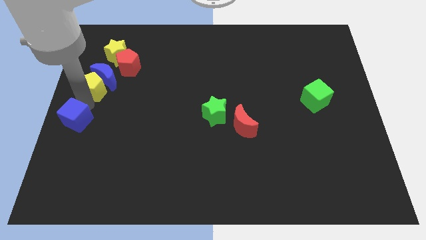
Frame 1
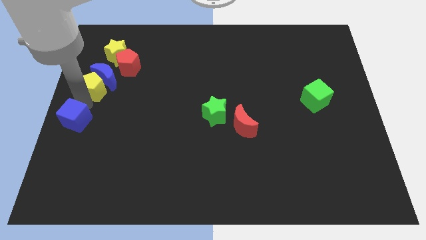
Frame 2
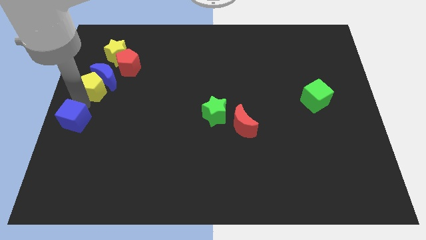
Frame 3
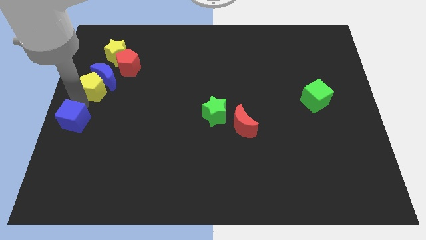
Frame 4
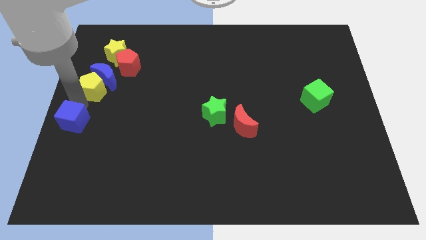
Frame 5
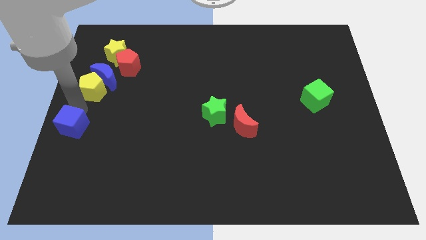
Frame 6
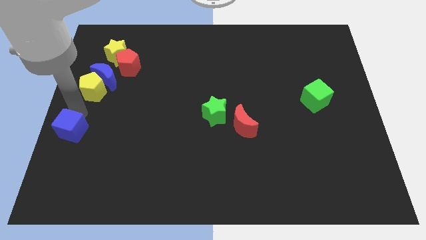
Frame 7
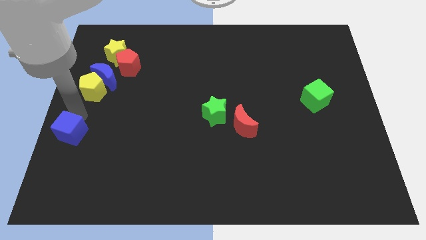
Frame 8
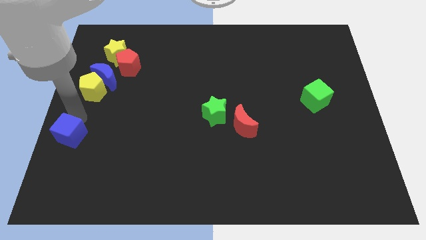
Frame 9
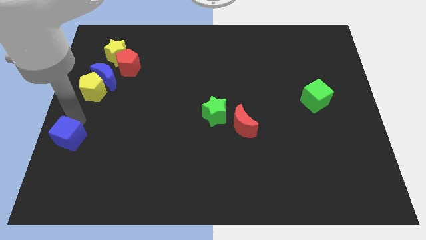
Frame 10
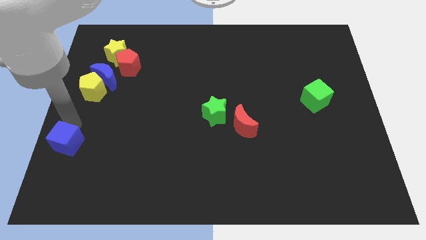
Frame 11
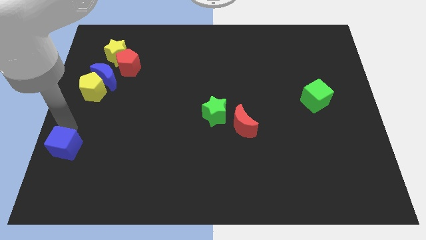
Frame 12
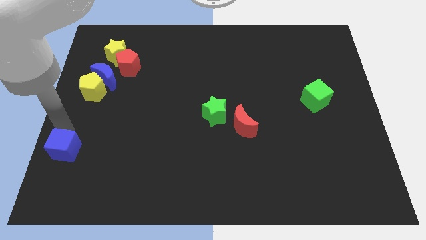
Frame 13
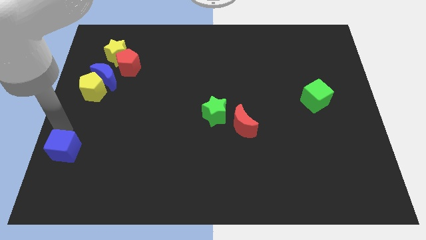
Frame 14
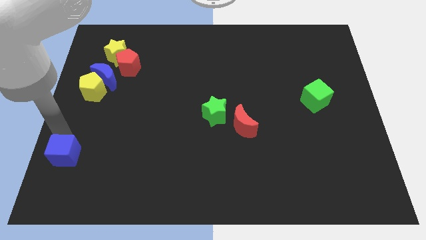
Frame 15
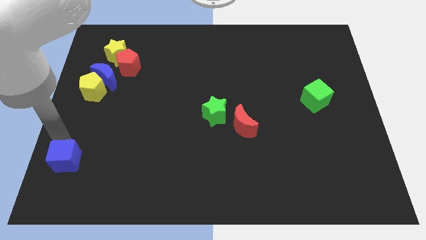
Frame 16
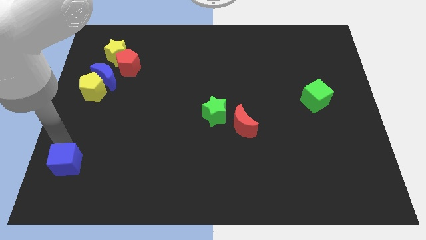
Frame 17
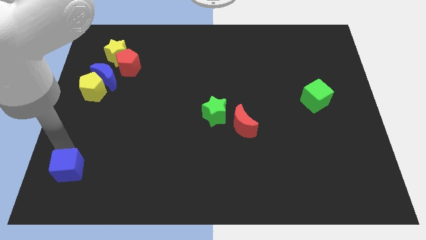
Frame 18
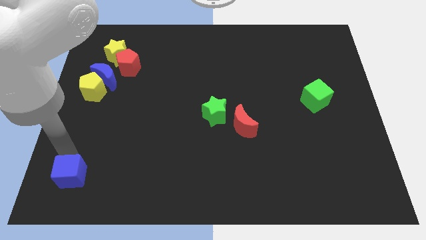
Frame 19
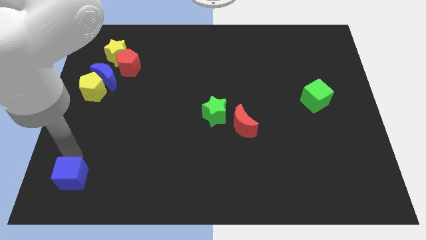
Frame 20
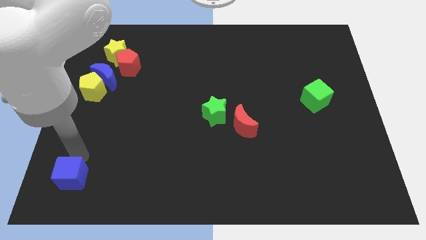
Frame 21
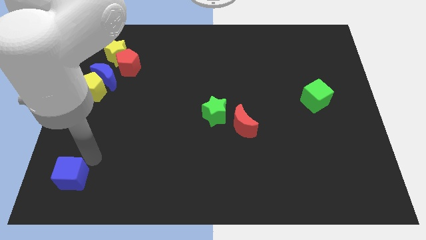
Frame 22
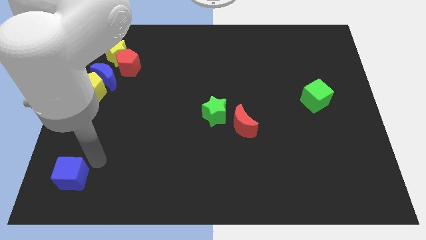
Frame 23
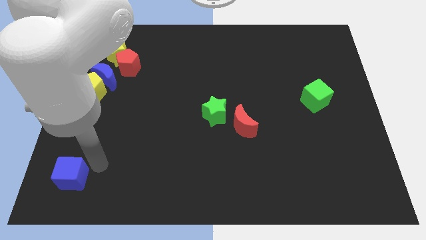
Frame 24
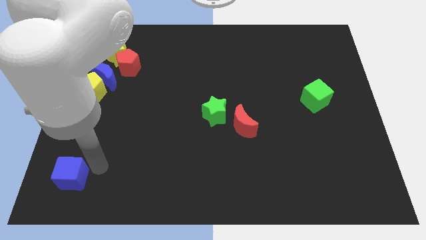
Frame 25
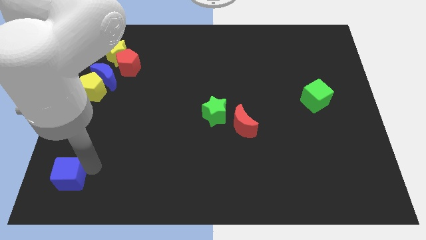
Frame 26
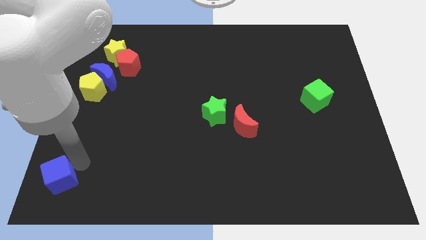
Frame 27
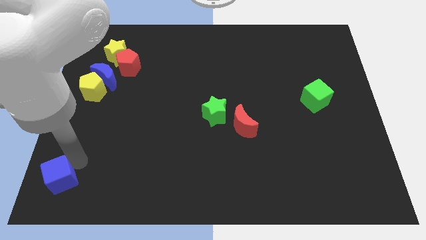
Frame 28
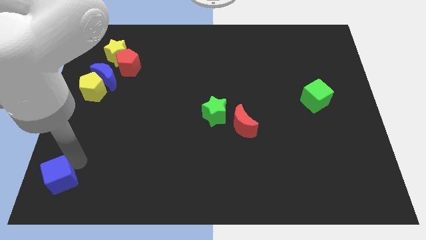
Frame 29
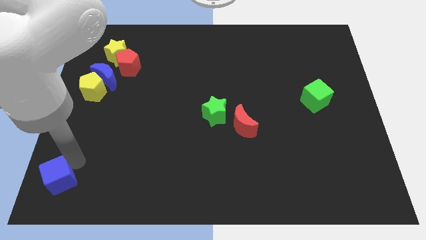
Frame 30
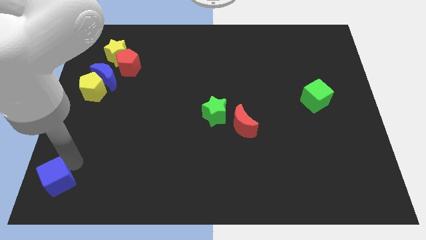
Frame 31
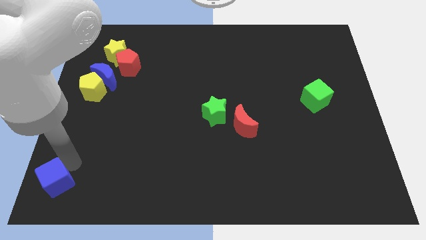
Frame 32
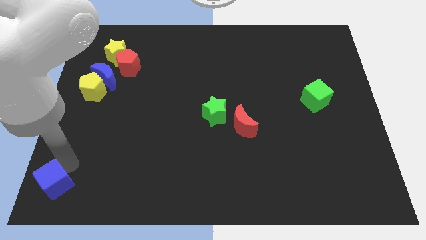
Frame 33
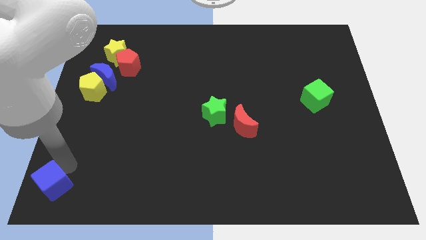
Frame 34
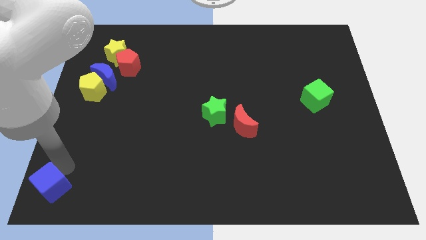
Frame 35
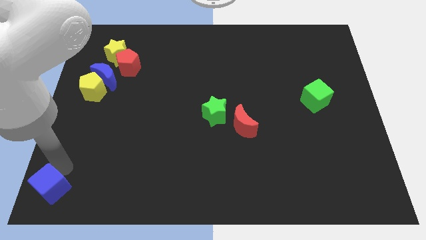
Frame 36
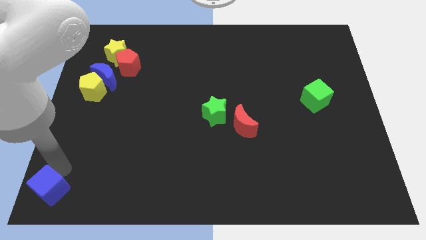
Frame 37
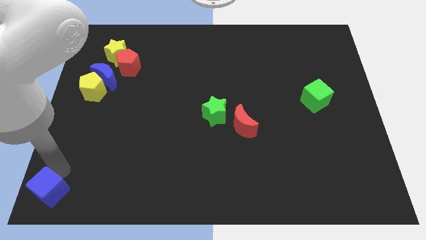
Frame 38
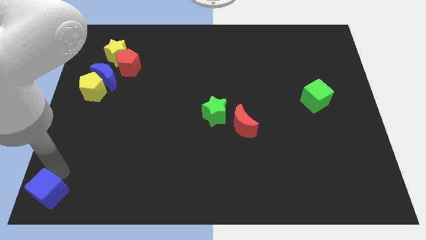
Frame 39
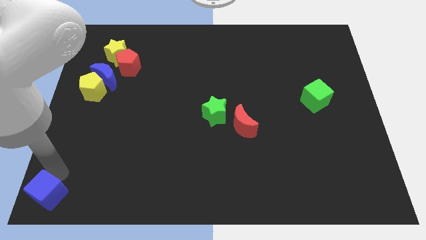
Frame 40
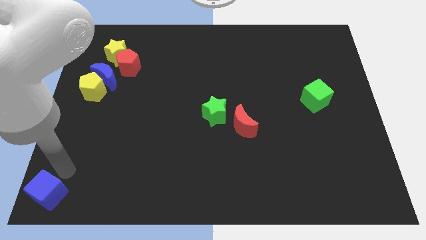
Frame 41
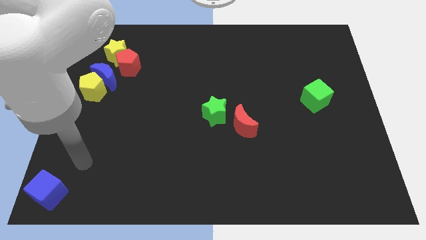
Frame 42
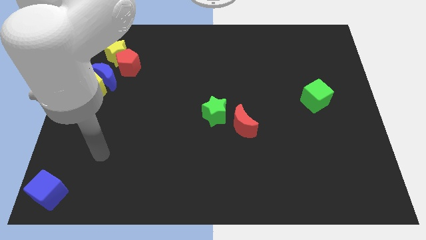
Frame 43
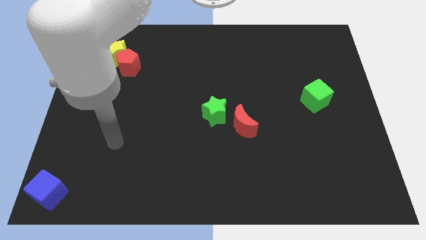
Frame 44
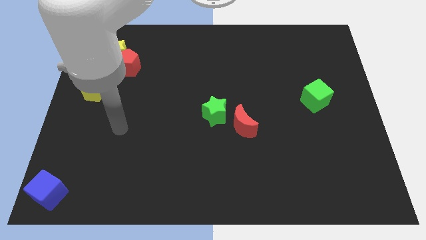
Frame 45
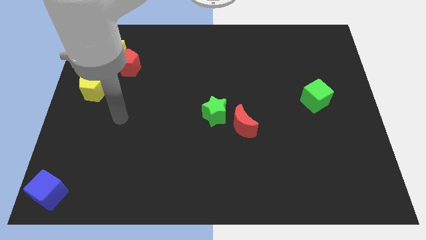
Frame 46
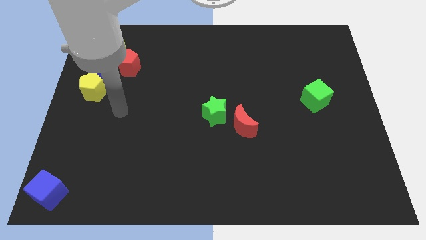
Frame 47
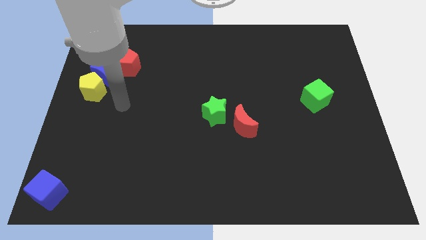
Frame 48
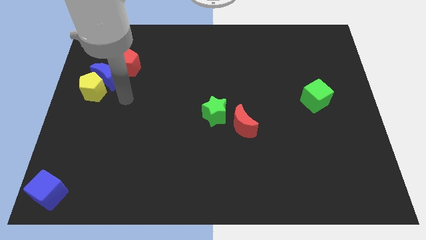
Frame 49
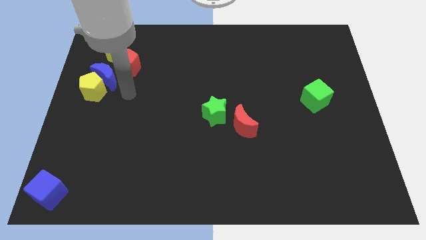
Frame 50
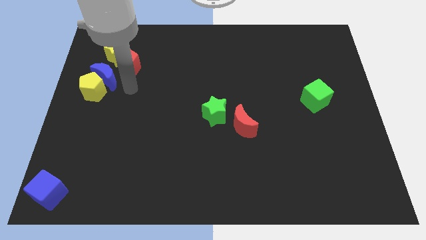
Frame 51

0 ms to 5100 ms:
move the blue cube towards the left bottom

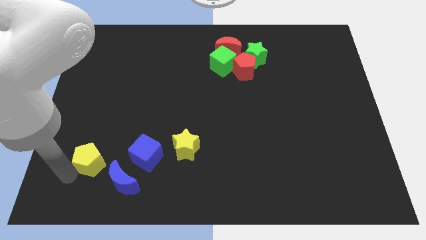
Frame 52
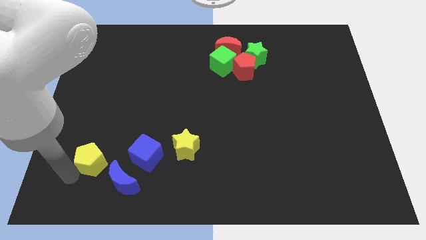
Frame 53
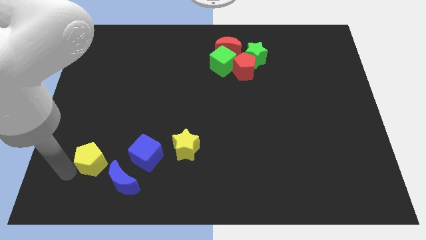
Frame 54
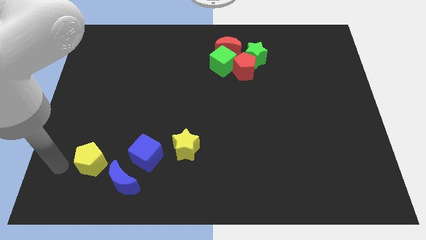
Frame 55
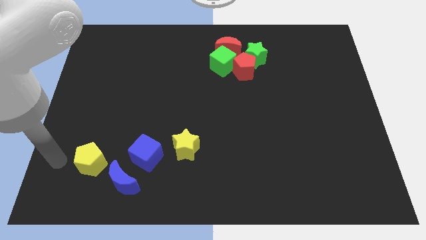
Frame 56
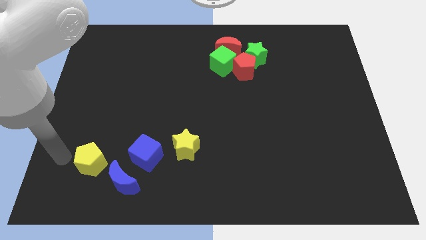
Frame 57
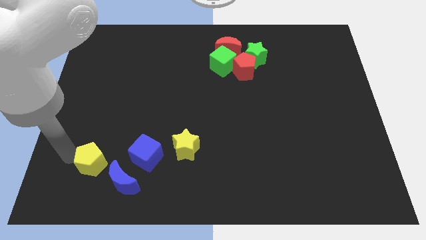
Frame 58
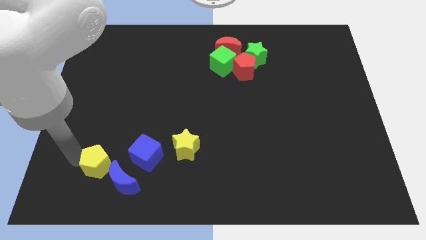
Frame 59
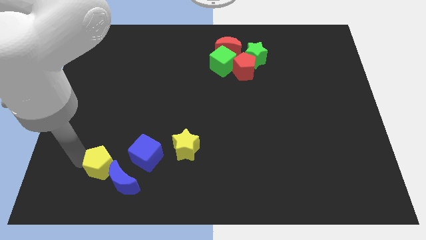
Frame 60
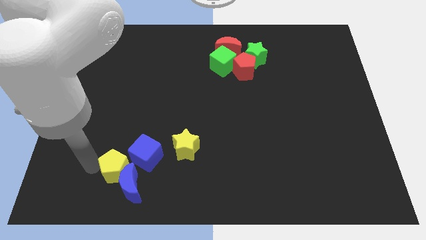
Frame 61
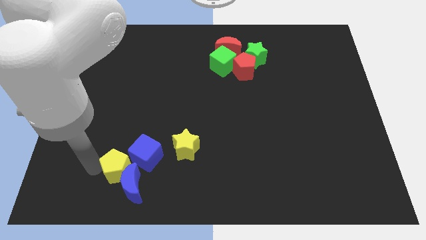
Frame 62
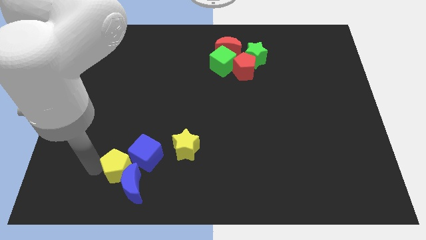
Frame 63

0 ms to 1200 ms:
push the yellow pentgaon into the blue moon

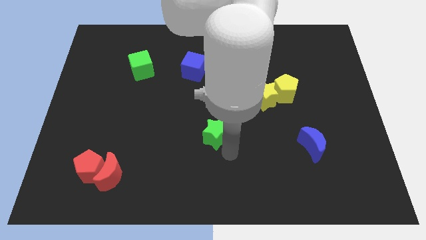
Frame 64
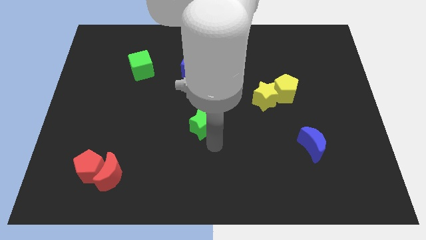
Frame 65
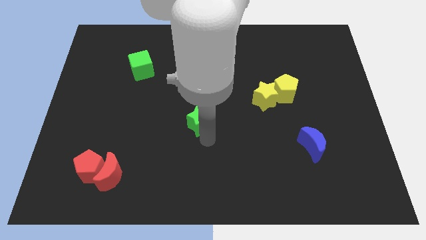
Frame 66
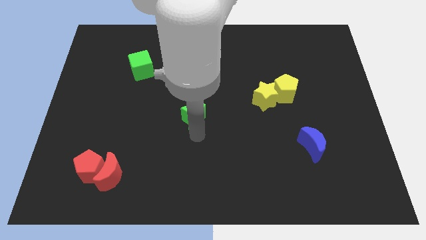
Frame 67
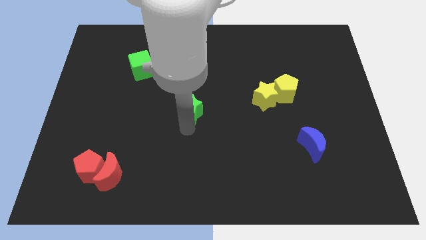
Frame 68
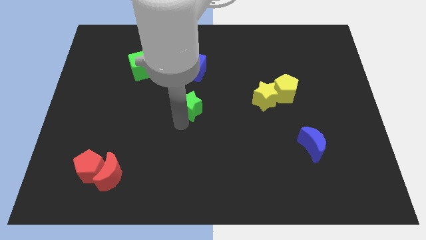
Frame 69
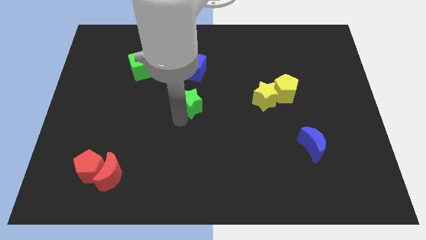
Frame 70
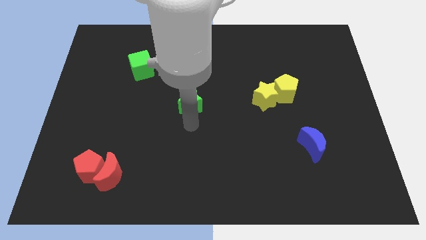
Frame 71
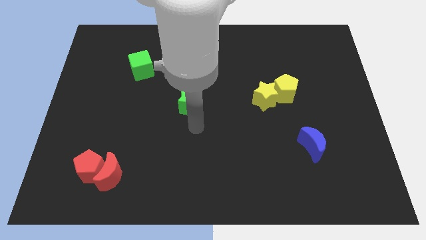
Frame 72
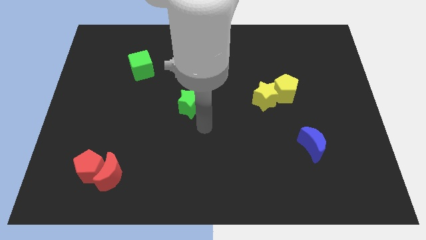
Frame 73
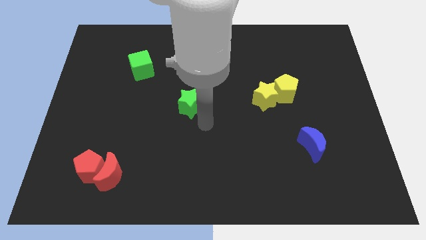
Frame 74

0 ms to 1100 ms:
place the green star below the blue cube

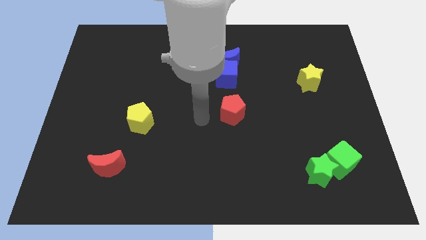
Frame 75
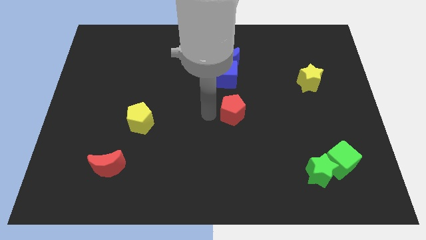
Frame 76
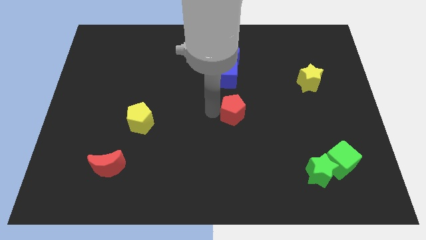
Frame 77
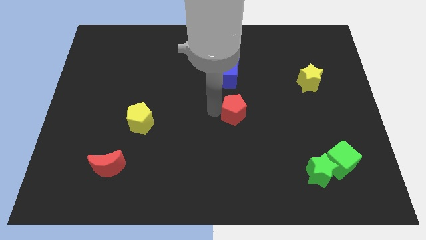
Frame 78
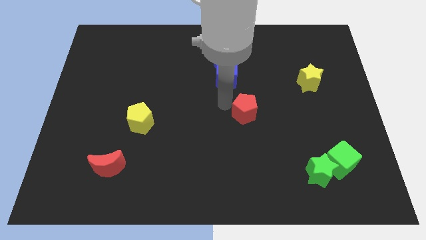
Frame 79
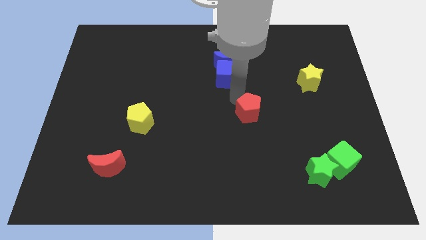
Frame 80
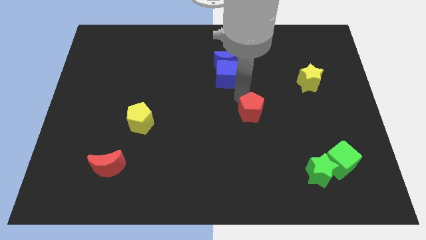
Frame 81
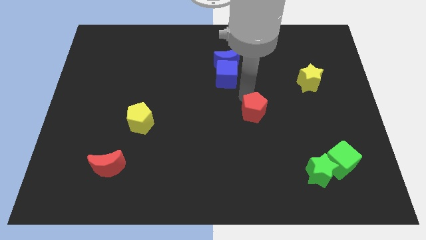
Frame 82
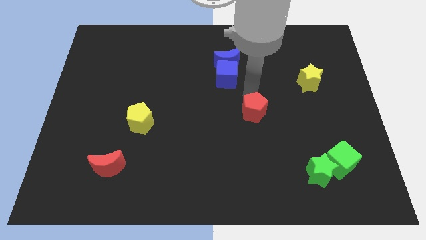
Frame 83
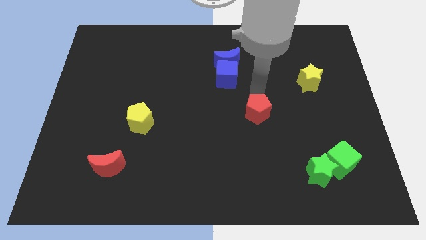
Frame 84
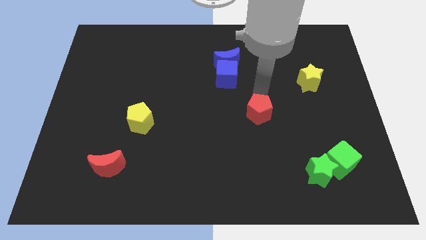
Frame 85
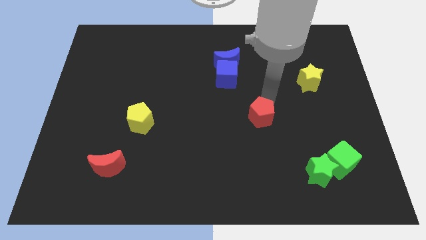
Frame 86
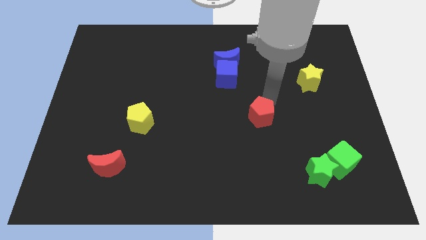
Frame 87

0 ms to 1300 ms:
move red pentagon right

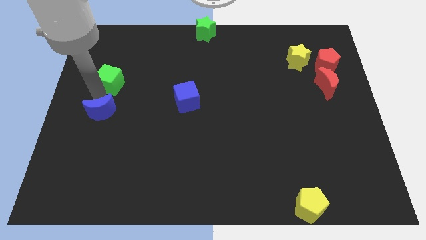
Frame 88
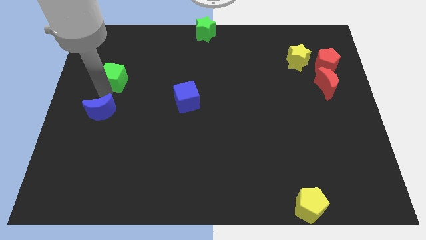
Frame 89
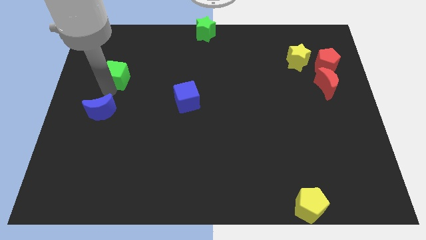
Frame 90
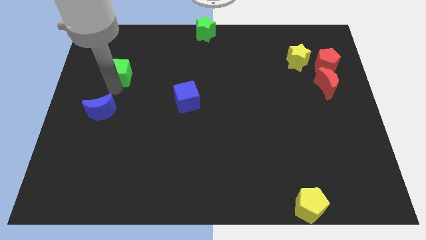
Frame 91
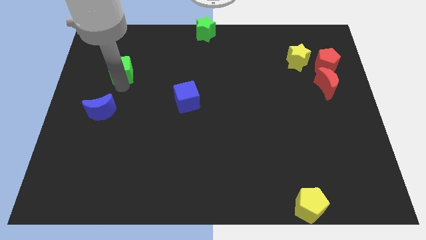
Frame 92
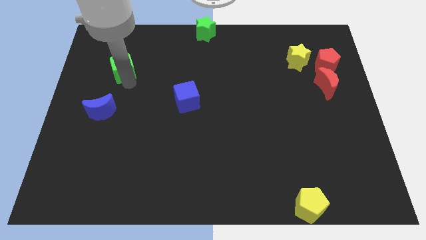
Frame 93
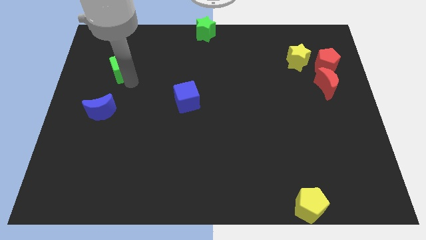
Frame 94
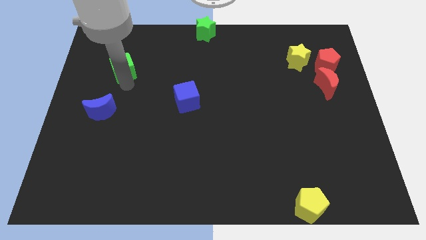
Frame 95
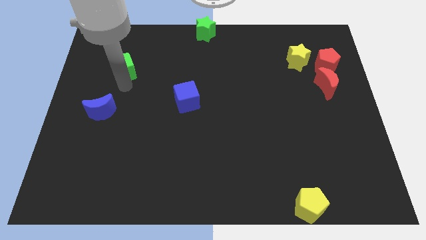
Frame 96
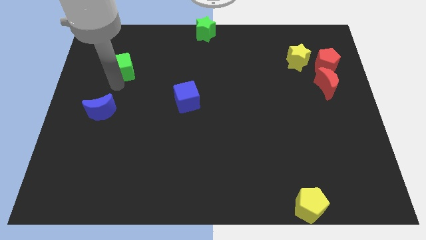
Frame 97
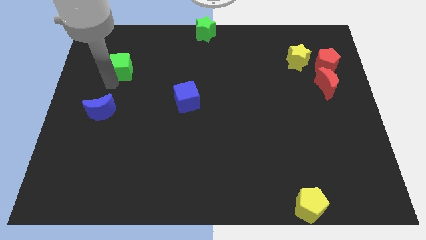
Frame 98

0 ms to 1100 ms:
move green cube diagonally towards the top
